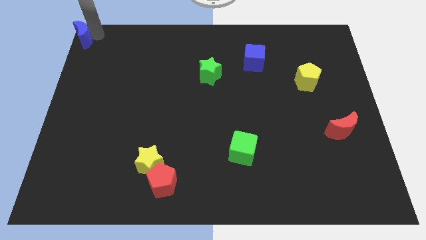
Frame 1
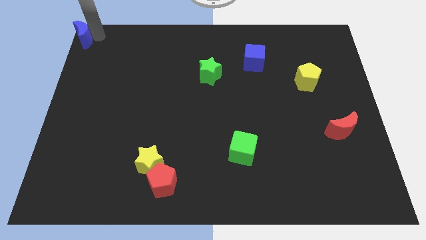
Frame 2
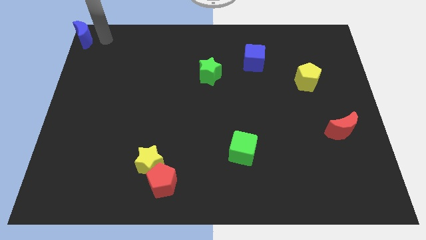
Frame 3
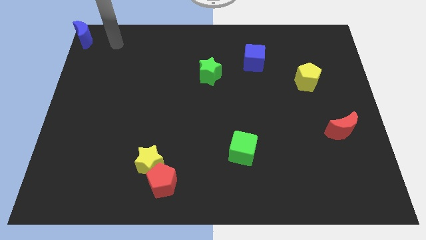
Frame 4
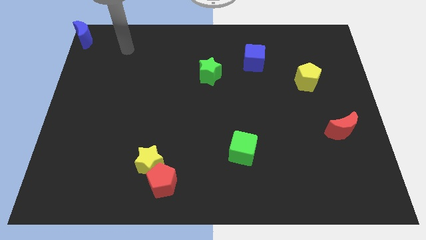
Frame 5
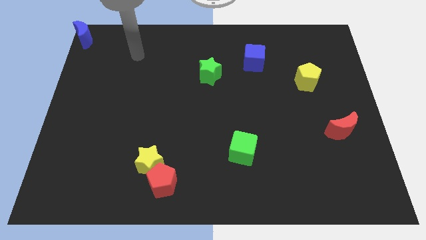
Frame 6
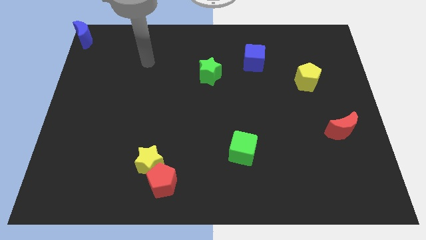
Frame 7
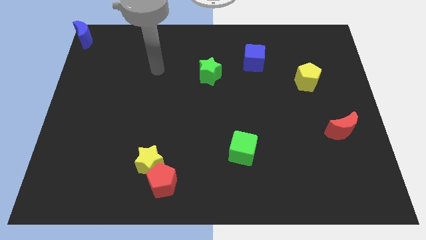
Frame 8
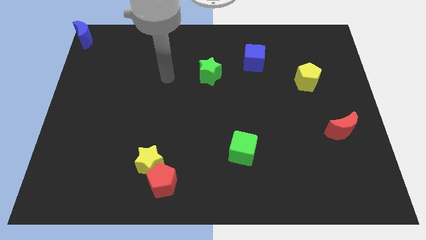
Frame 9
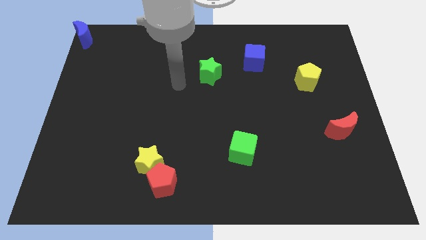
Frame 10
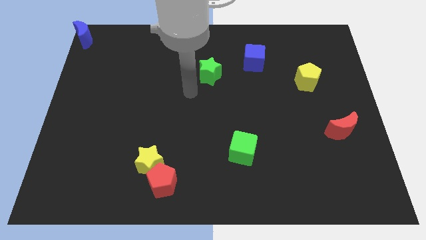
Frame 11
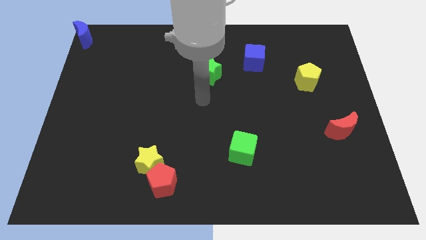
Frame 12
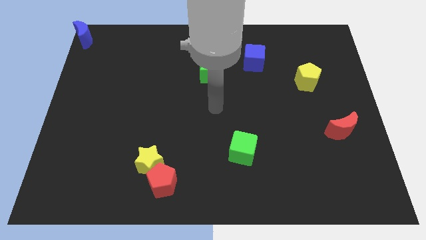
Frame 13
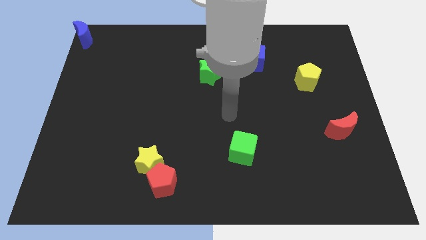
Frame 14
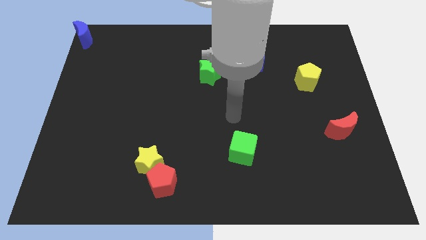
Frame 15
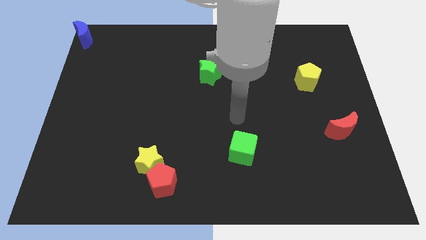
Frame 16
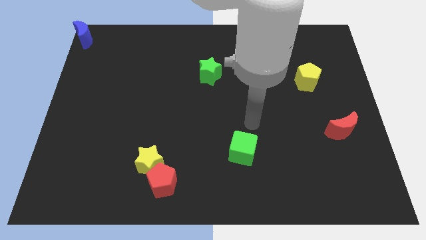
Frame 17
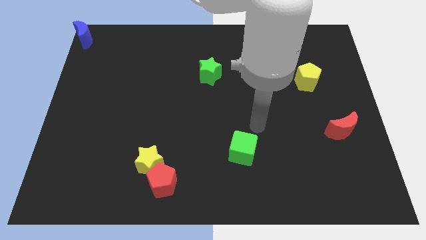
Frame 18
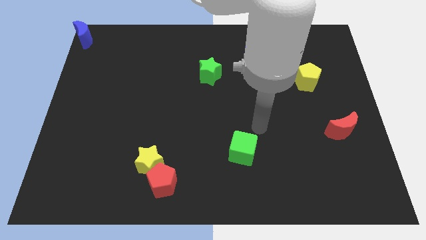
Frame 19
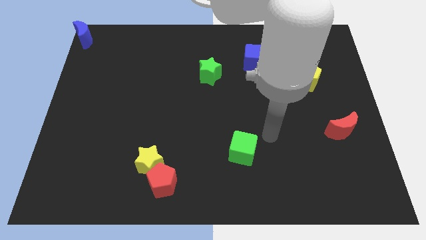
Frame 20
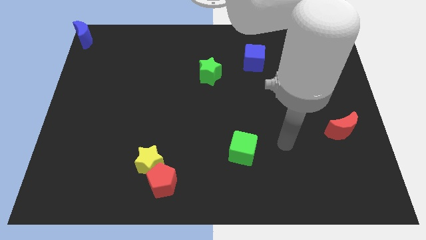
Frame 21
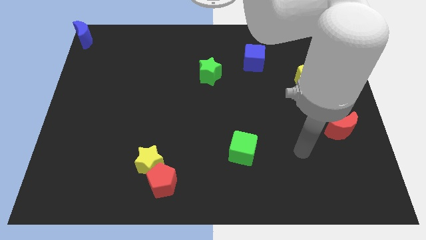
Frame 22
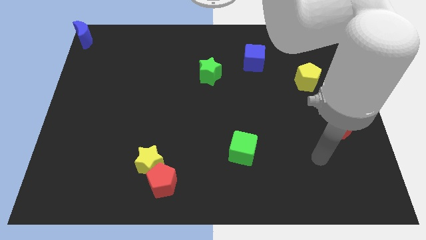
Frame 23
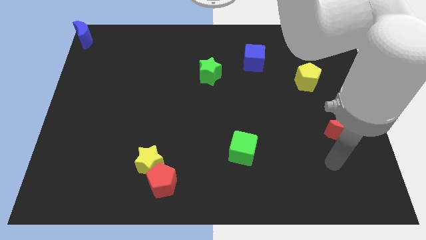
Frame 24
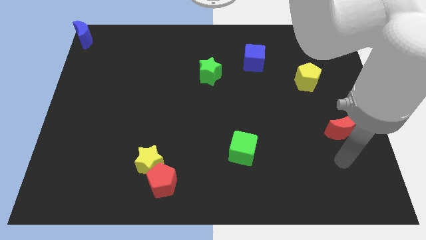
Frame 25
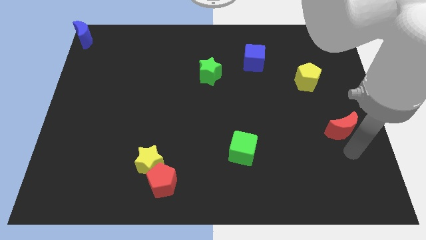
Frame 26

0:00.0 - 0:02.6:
point the arm below the red moon

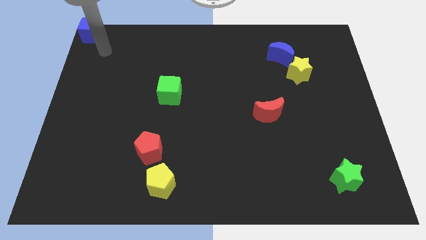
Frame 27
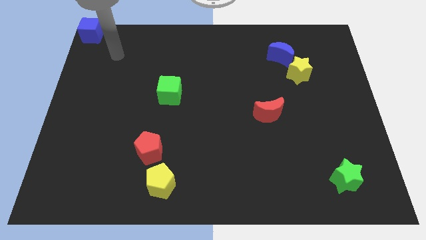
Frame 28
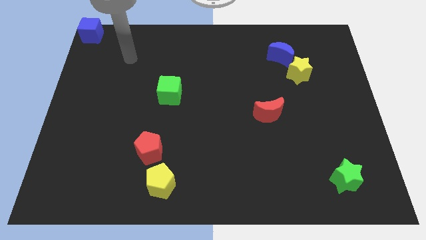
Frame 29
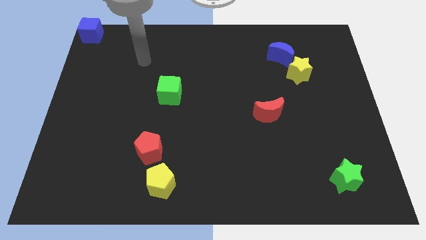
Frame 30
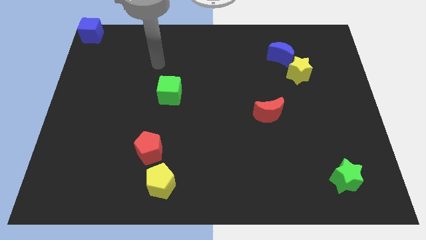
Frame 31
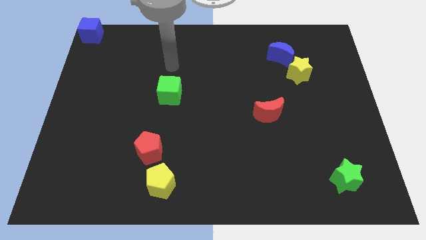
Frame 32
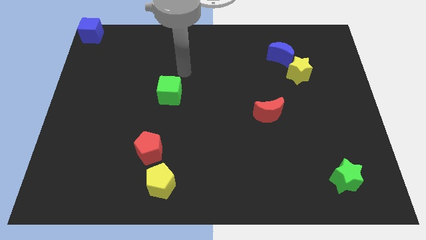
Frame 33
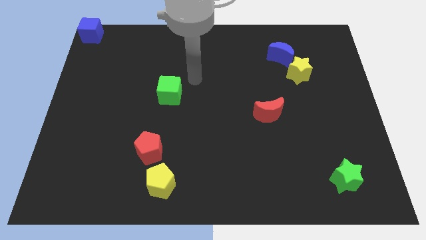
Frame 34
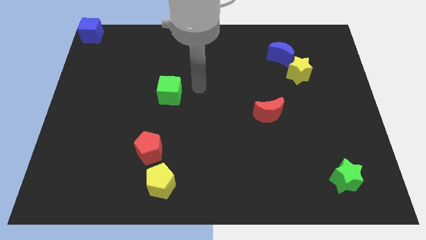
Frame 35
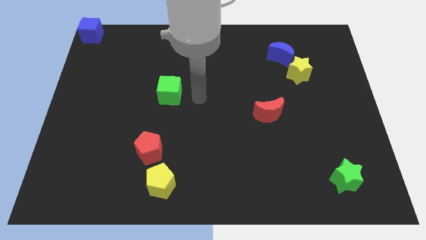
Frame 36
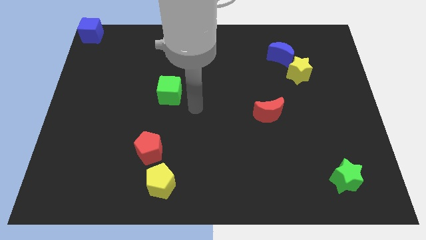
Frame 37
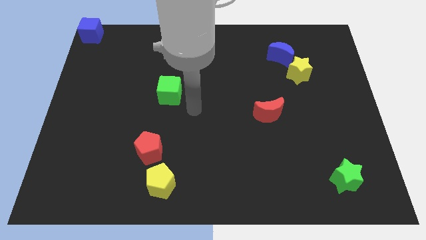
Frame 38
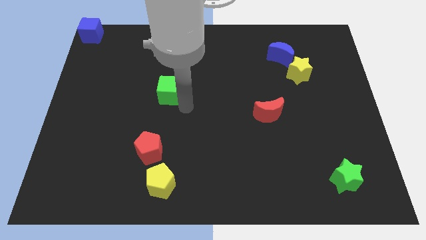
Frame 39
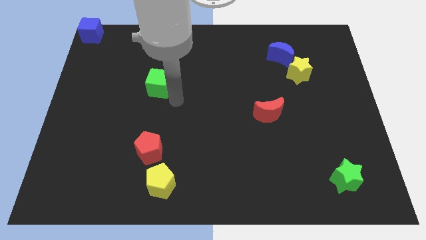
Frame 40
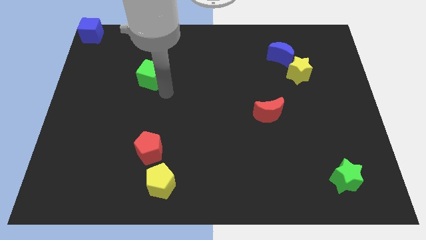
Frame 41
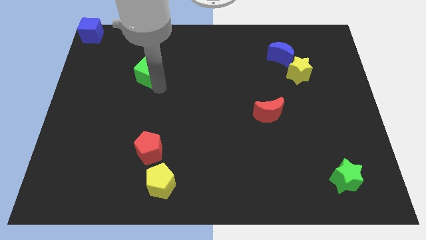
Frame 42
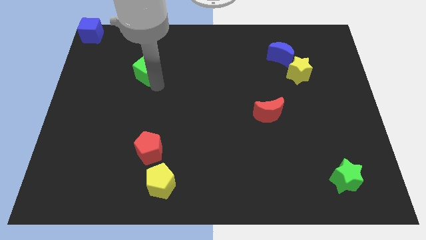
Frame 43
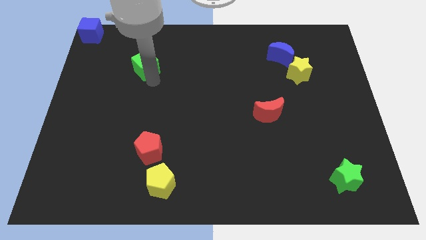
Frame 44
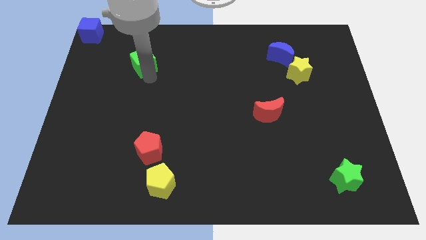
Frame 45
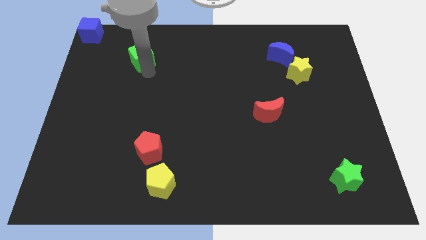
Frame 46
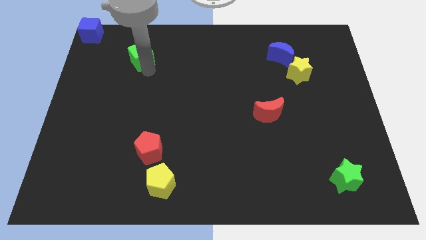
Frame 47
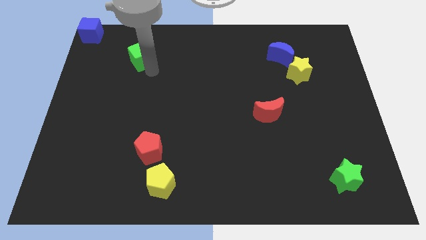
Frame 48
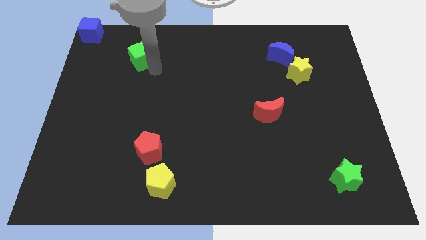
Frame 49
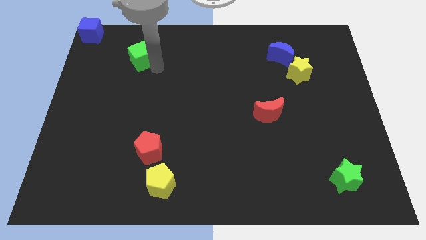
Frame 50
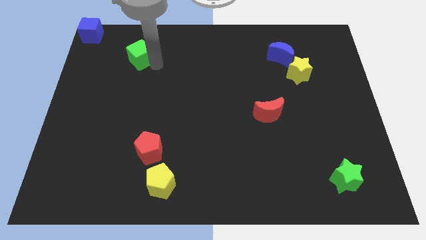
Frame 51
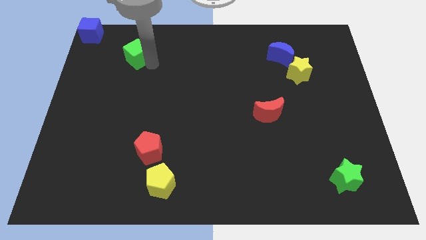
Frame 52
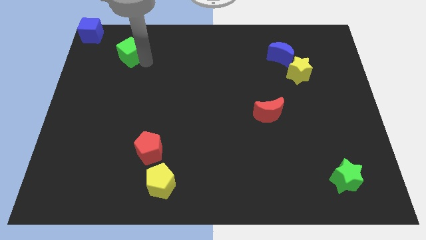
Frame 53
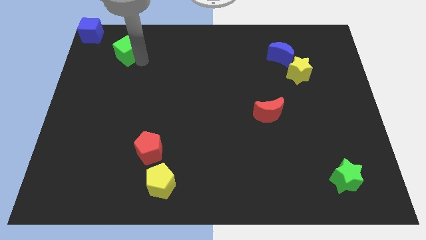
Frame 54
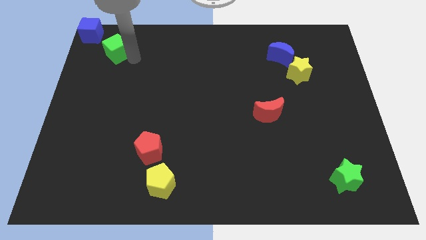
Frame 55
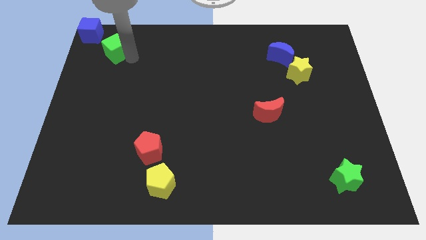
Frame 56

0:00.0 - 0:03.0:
slide the green cube to the bottom right of the blue cube

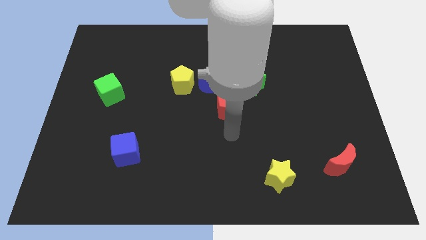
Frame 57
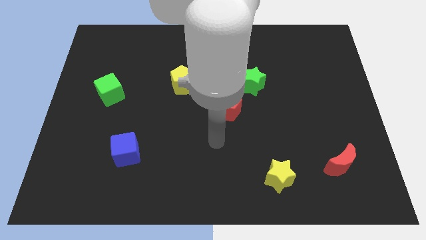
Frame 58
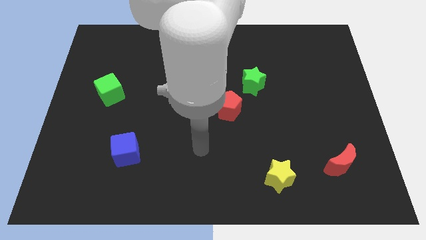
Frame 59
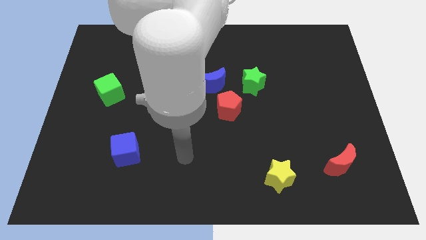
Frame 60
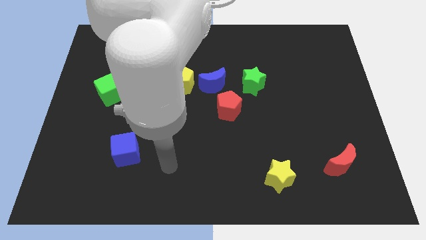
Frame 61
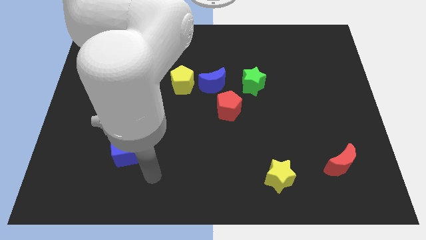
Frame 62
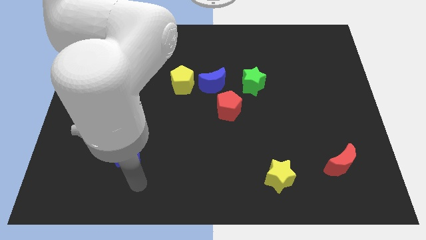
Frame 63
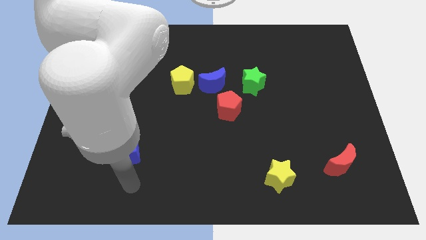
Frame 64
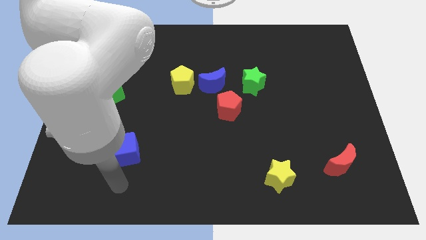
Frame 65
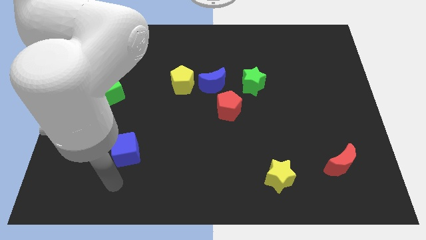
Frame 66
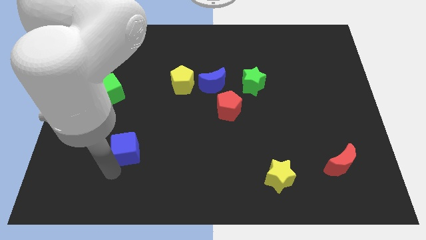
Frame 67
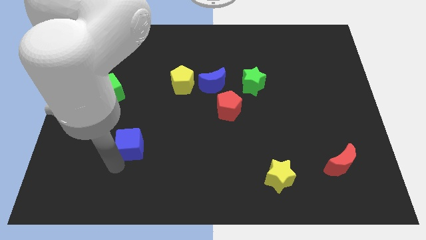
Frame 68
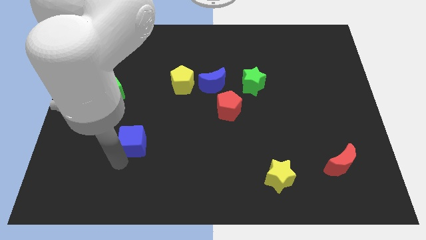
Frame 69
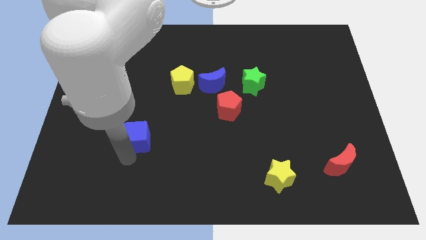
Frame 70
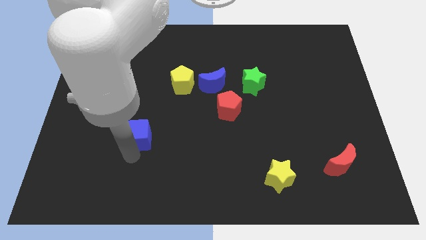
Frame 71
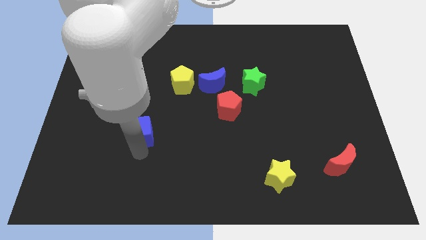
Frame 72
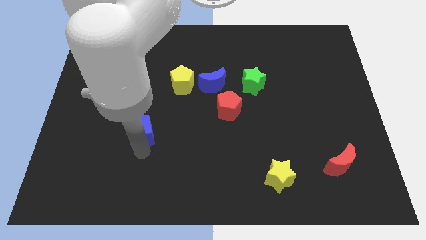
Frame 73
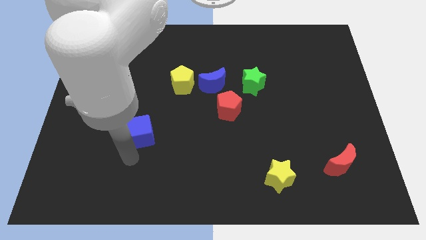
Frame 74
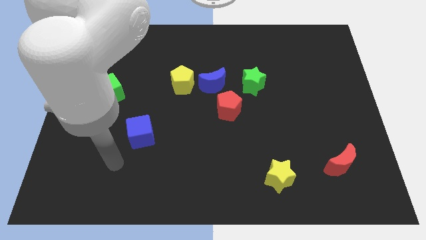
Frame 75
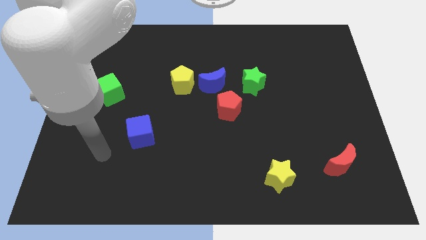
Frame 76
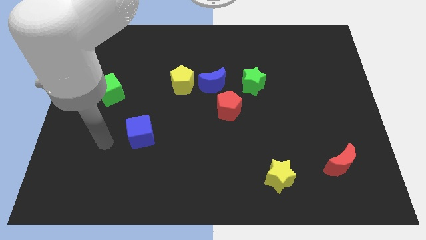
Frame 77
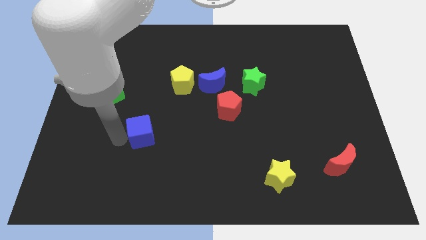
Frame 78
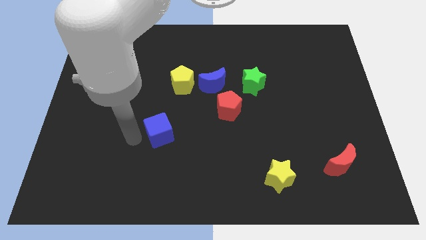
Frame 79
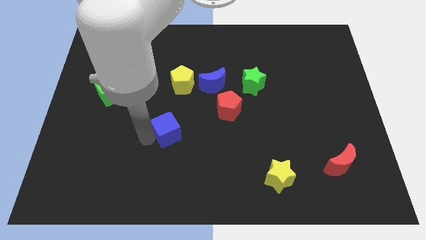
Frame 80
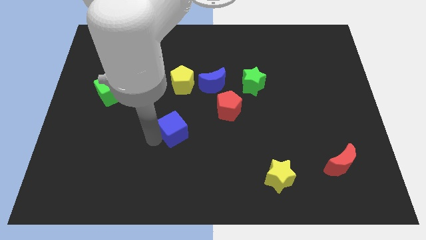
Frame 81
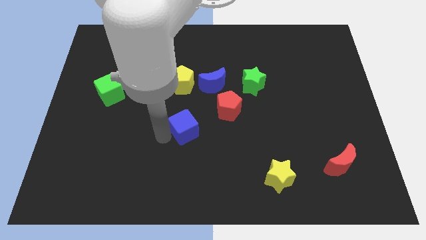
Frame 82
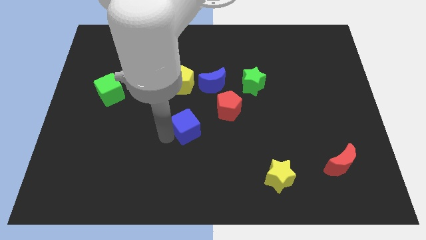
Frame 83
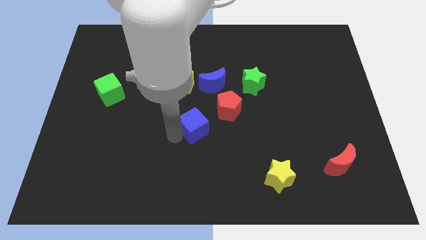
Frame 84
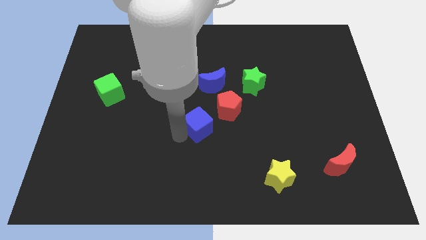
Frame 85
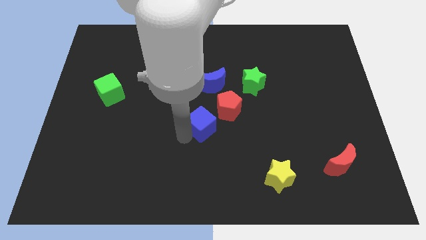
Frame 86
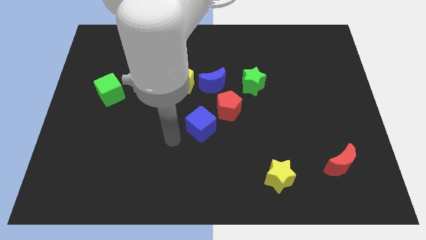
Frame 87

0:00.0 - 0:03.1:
slide the blue cube towards the bottom left side of the red pentagon

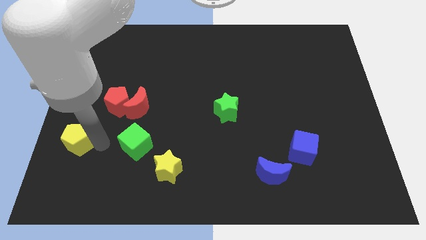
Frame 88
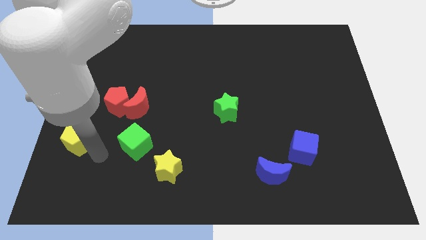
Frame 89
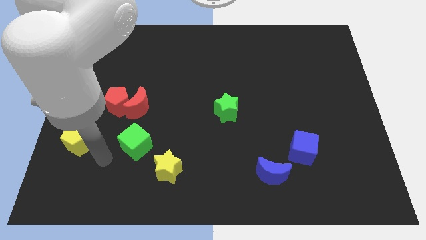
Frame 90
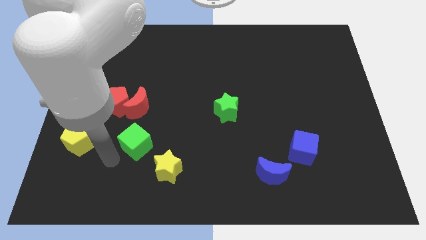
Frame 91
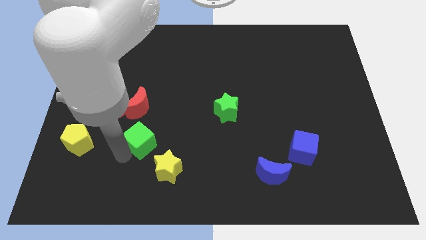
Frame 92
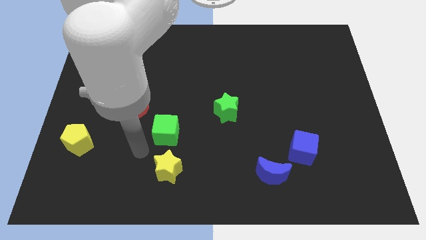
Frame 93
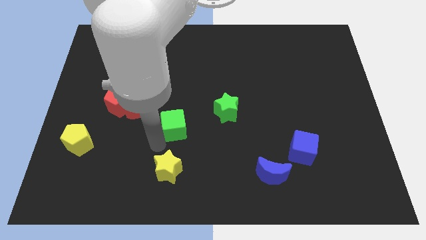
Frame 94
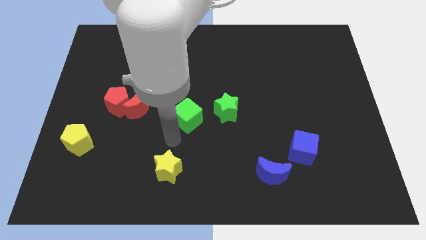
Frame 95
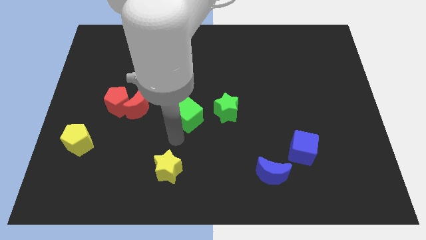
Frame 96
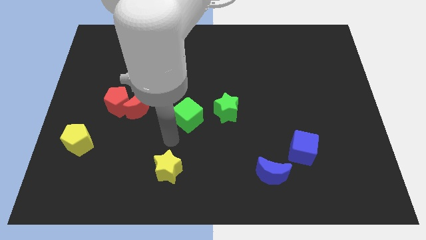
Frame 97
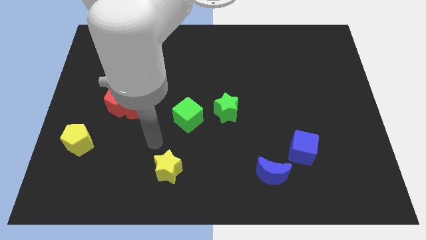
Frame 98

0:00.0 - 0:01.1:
put the green cube to the left of green star
